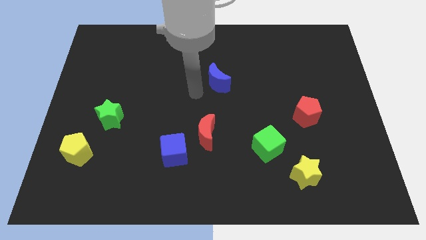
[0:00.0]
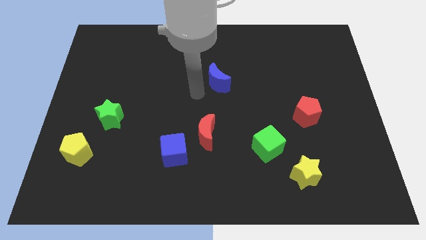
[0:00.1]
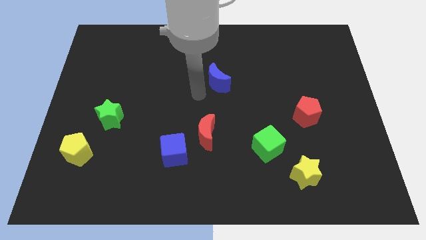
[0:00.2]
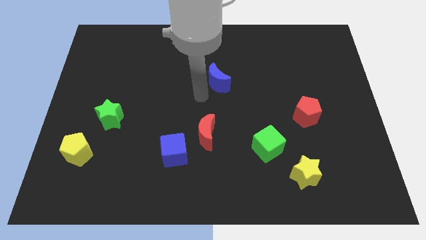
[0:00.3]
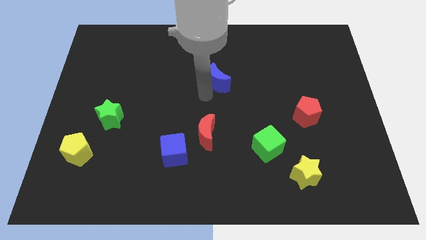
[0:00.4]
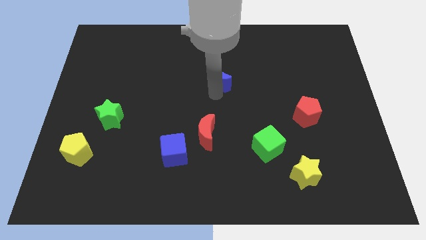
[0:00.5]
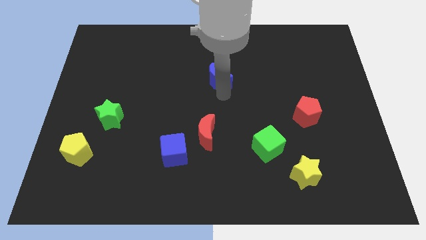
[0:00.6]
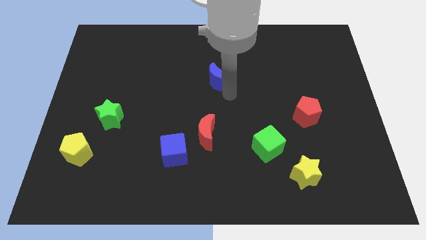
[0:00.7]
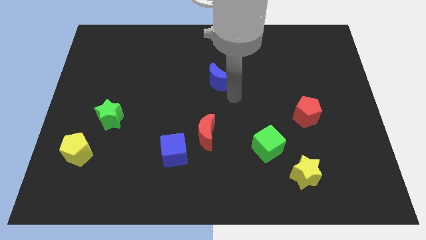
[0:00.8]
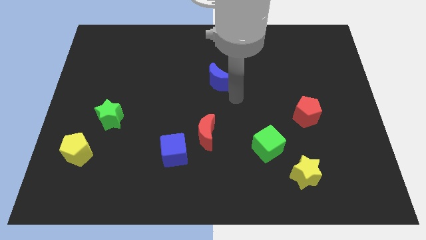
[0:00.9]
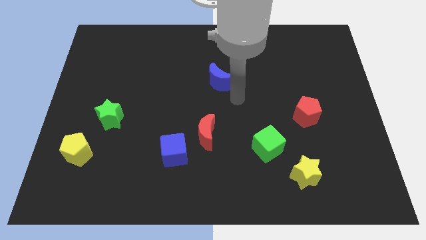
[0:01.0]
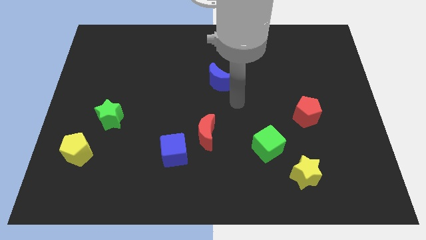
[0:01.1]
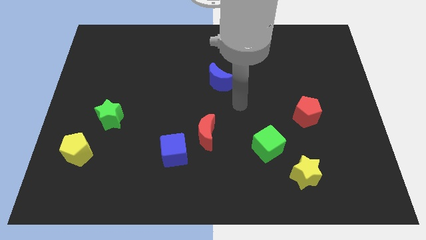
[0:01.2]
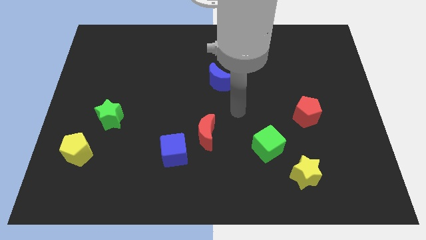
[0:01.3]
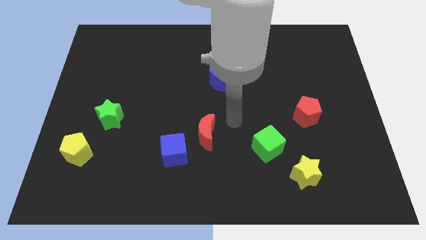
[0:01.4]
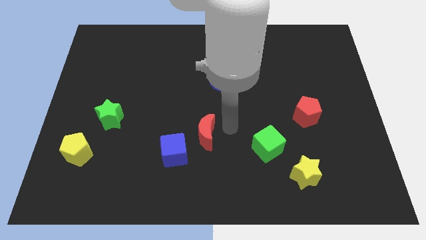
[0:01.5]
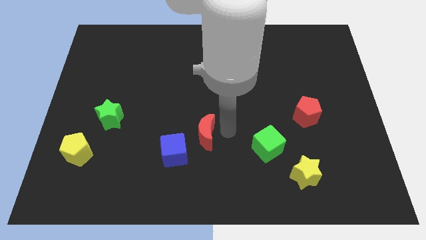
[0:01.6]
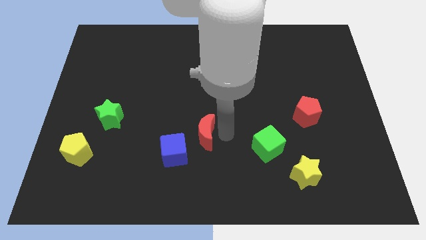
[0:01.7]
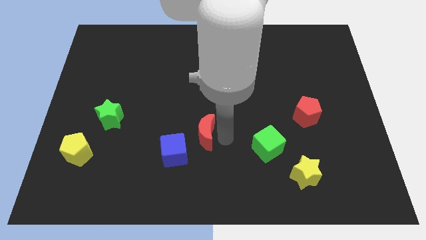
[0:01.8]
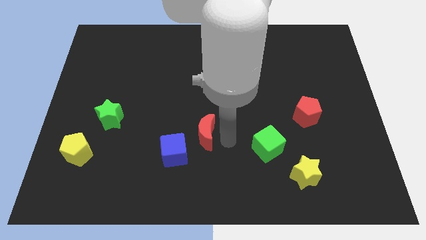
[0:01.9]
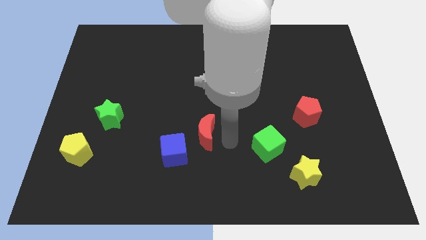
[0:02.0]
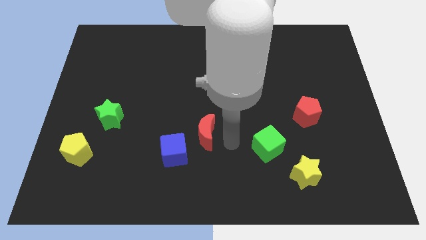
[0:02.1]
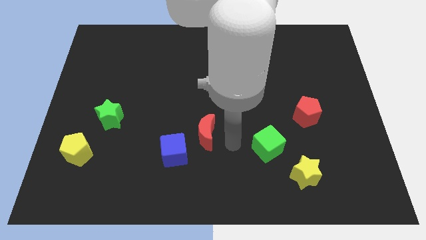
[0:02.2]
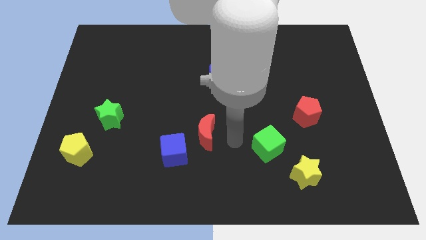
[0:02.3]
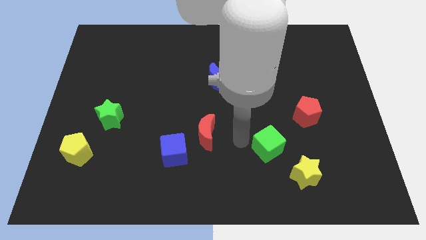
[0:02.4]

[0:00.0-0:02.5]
place your arm at the left of the green cube

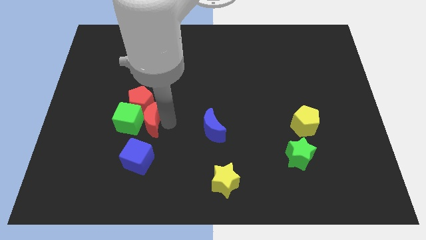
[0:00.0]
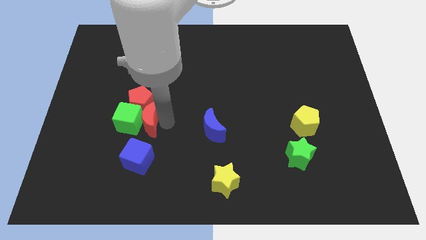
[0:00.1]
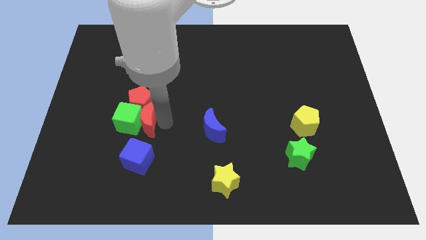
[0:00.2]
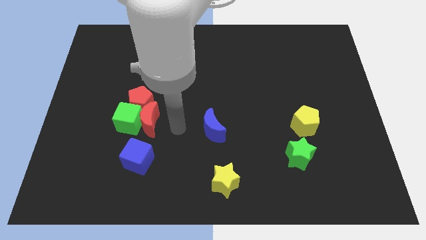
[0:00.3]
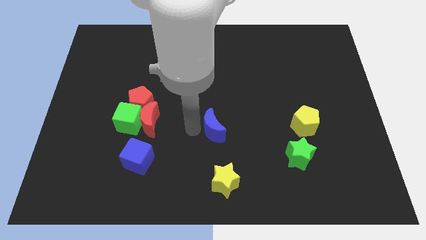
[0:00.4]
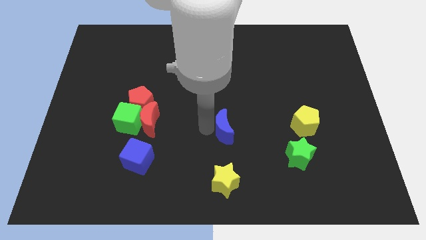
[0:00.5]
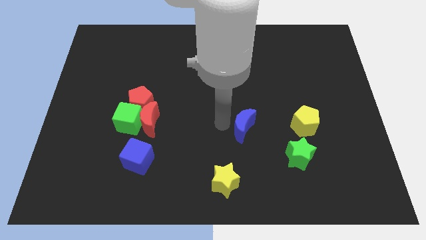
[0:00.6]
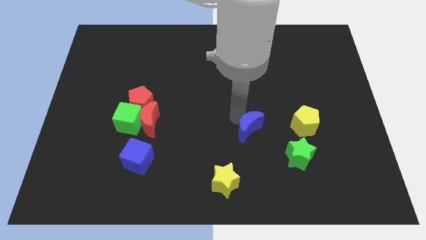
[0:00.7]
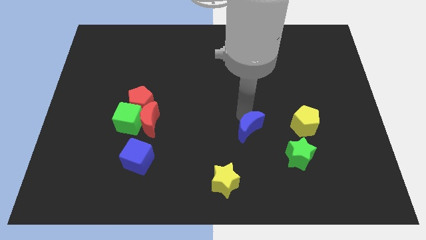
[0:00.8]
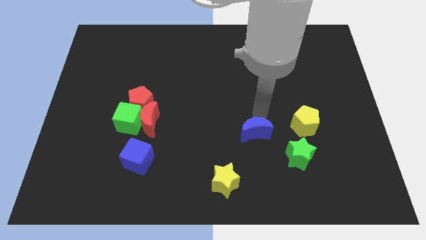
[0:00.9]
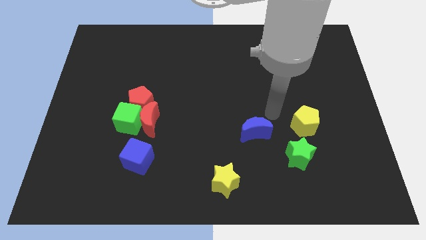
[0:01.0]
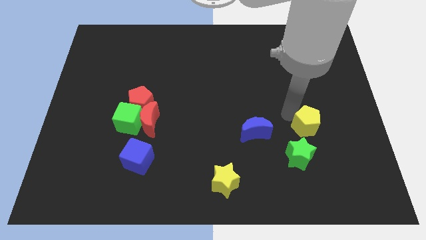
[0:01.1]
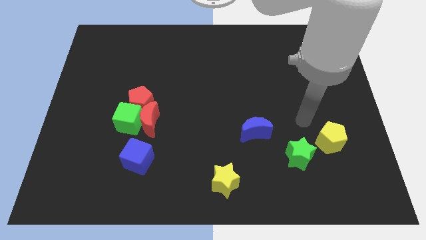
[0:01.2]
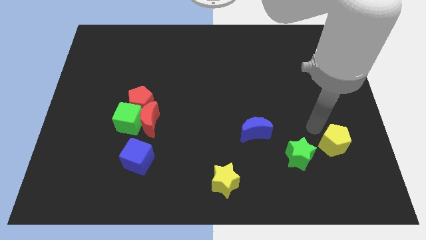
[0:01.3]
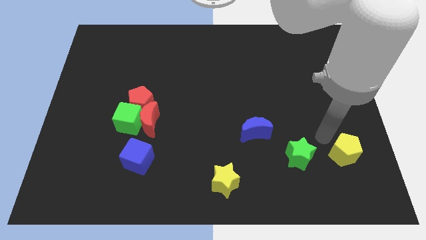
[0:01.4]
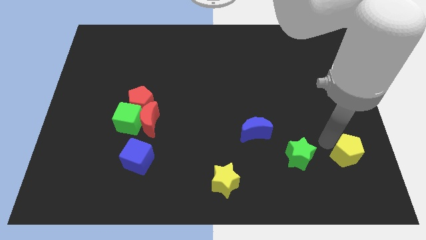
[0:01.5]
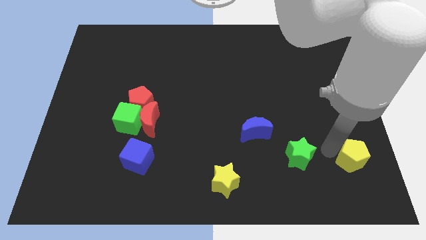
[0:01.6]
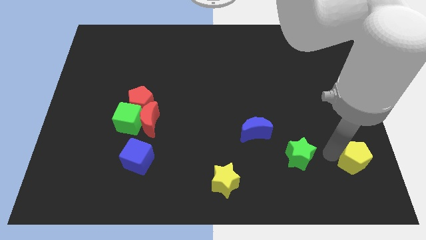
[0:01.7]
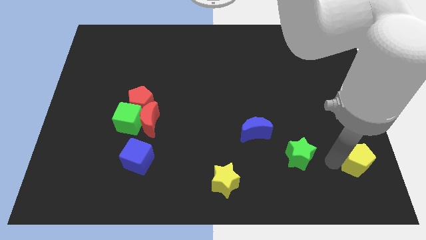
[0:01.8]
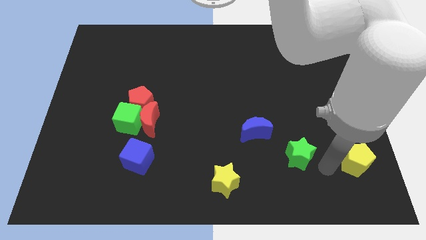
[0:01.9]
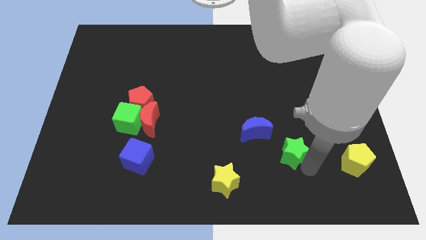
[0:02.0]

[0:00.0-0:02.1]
move yellow pentagon to the bottom left

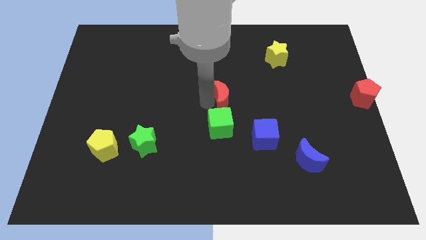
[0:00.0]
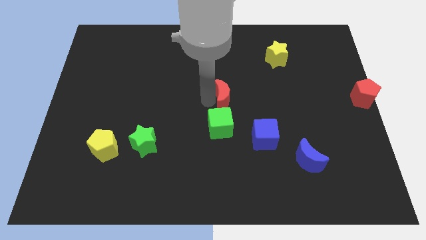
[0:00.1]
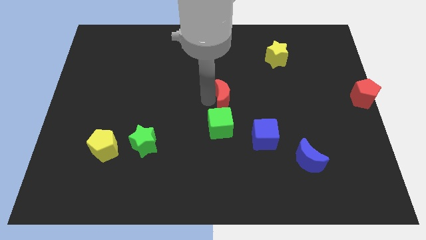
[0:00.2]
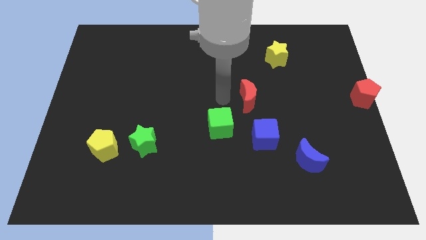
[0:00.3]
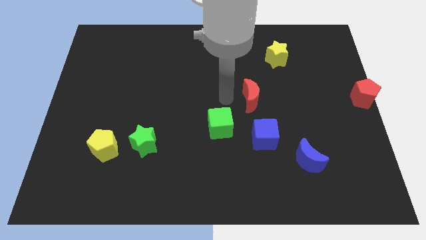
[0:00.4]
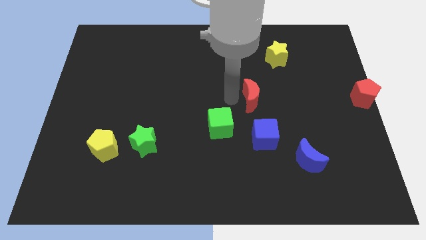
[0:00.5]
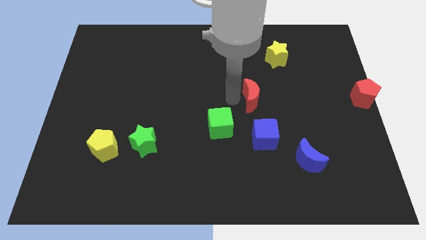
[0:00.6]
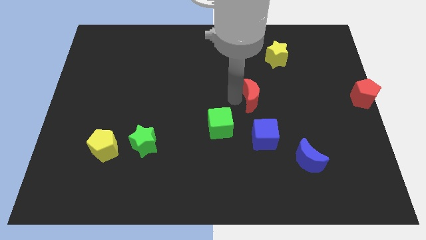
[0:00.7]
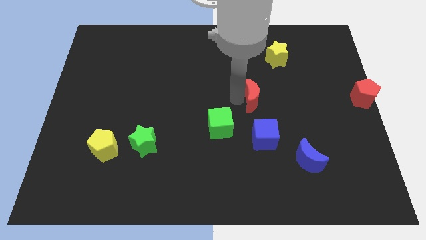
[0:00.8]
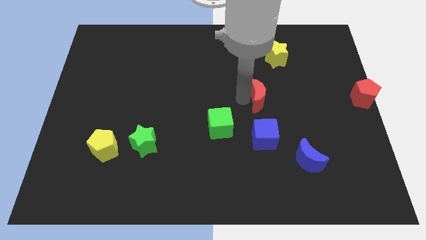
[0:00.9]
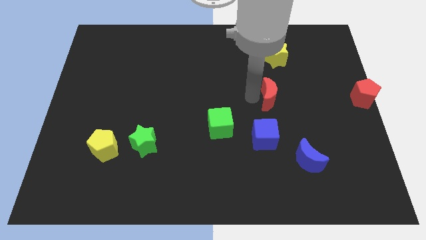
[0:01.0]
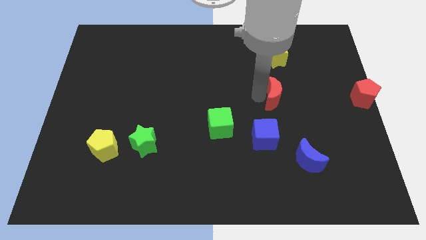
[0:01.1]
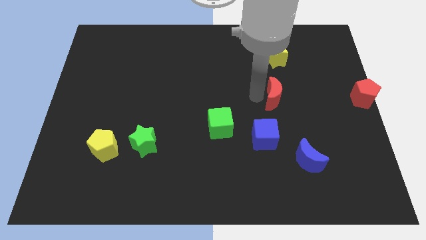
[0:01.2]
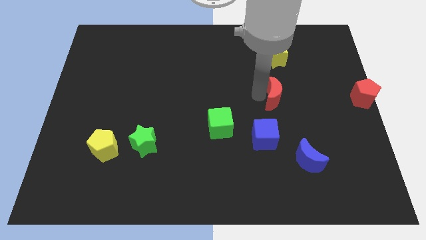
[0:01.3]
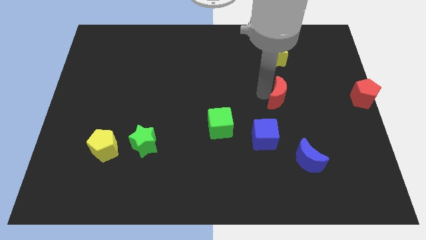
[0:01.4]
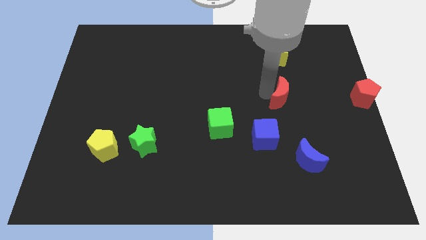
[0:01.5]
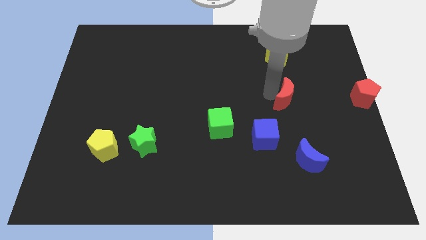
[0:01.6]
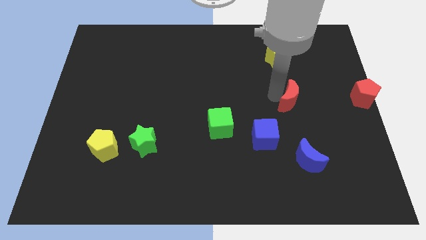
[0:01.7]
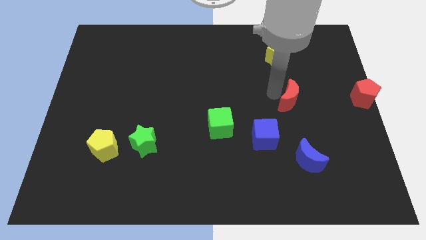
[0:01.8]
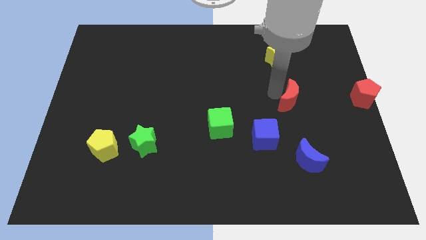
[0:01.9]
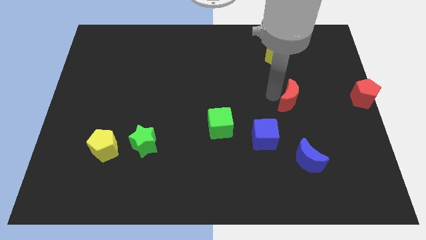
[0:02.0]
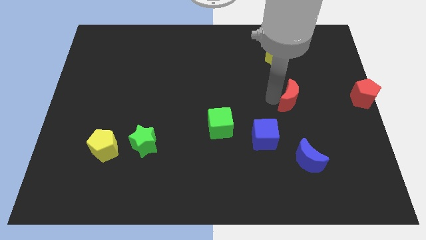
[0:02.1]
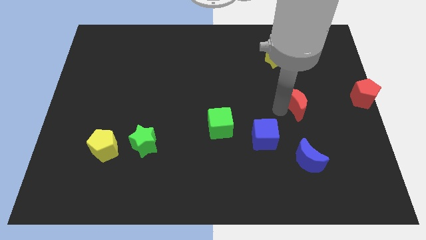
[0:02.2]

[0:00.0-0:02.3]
move the red crescent to the top right of the blue cube

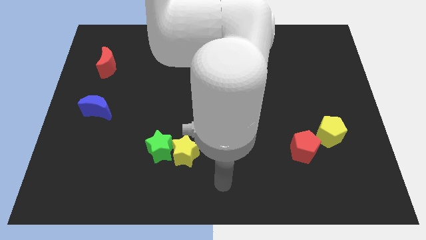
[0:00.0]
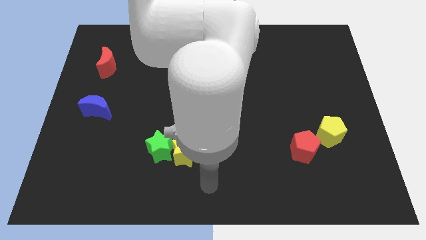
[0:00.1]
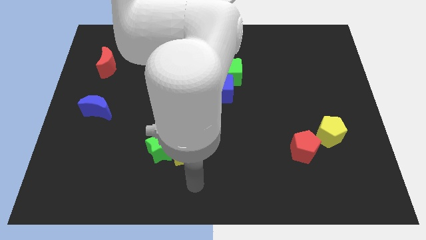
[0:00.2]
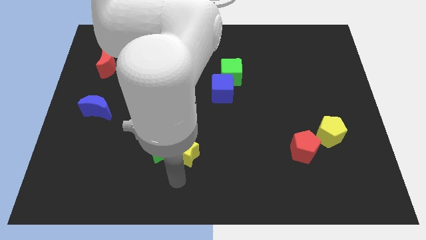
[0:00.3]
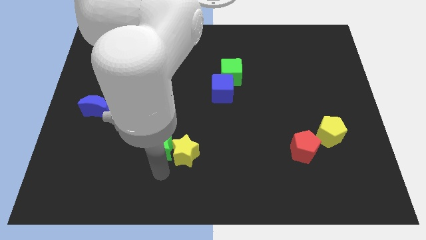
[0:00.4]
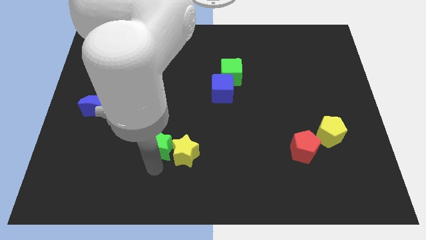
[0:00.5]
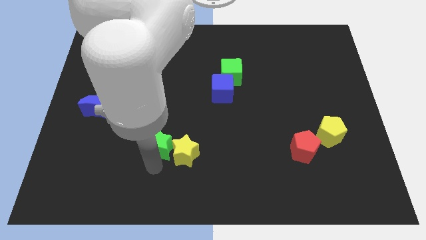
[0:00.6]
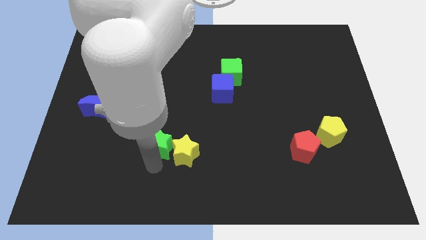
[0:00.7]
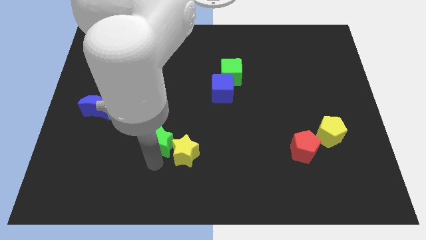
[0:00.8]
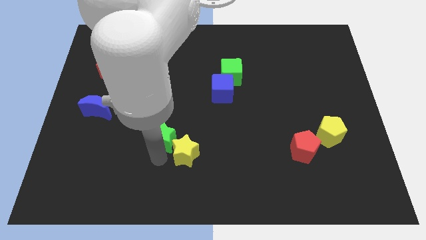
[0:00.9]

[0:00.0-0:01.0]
tap the bottom of green star

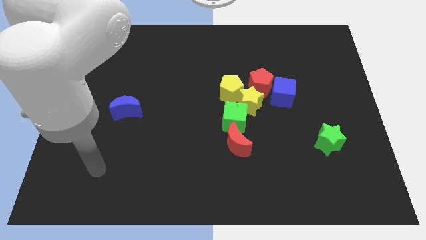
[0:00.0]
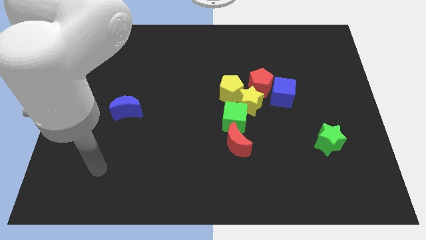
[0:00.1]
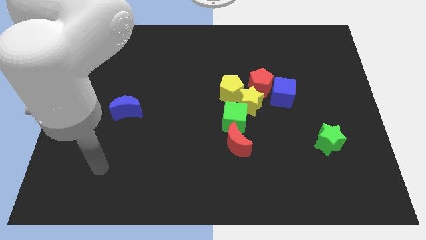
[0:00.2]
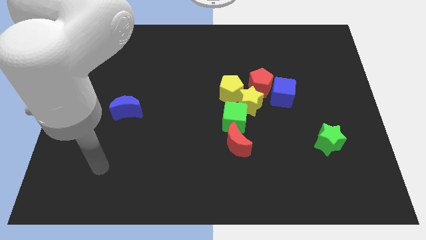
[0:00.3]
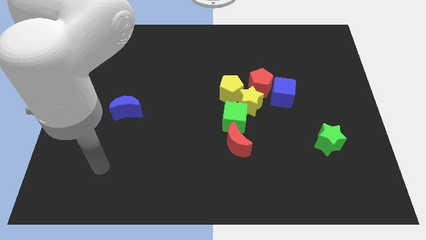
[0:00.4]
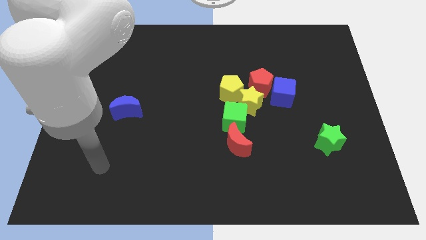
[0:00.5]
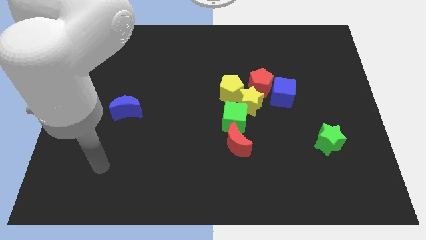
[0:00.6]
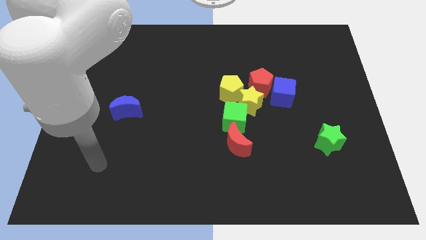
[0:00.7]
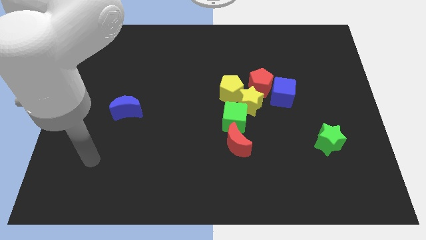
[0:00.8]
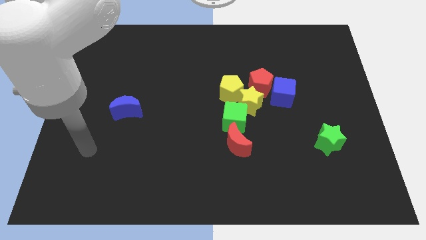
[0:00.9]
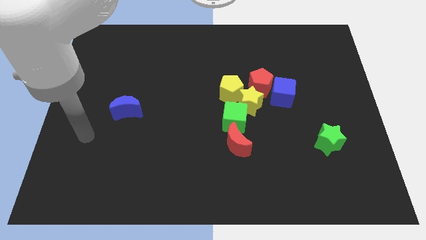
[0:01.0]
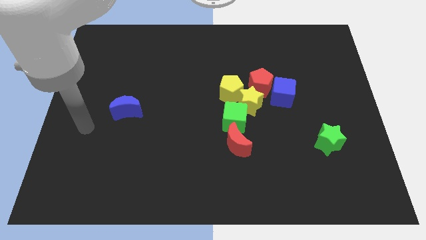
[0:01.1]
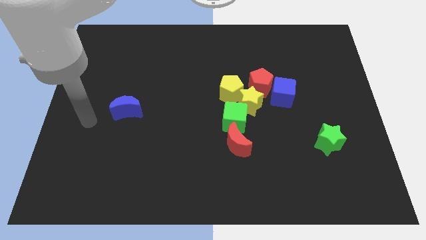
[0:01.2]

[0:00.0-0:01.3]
move arm towards blue moon
